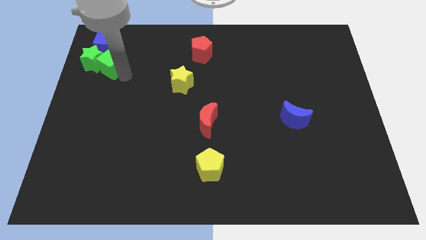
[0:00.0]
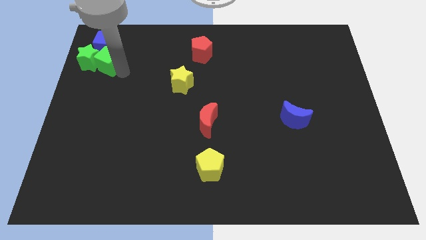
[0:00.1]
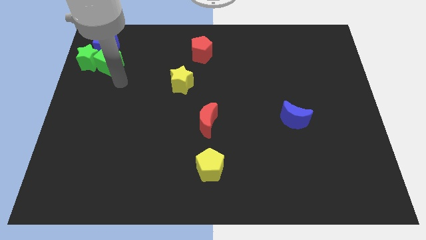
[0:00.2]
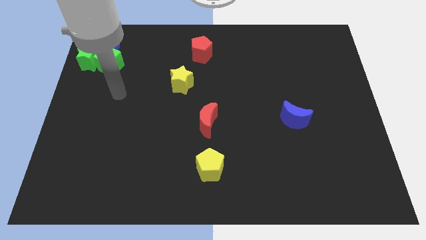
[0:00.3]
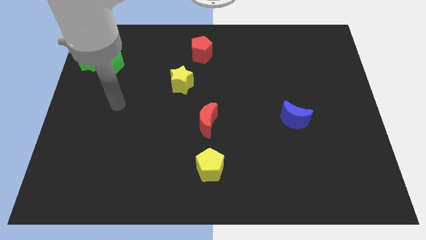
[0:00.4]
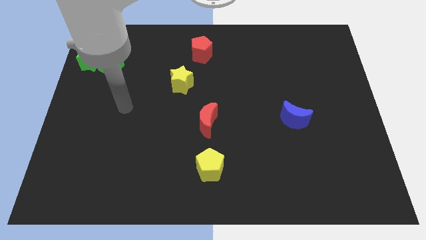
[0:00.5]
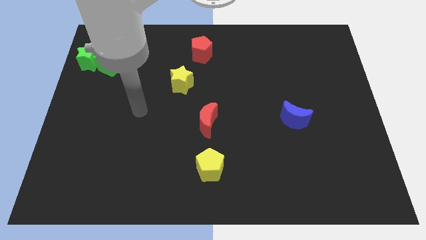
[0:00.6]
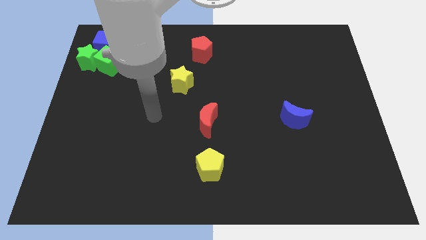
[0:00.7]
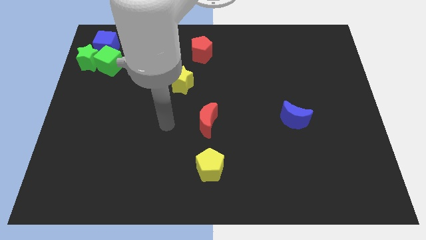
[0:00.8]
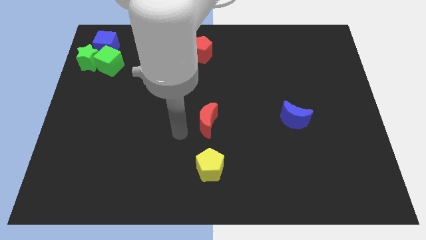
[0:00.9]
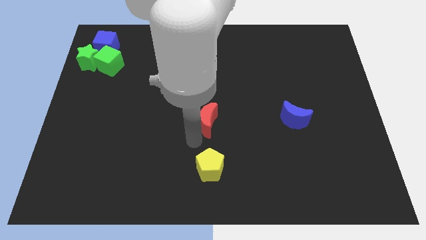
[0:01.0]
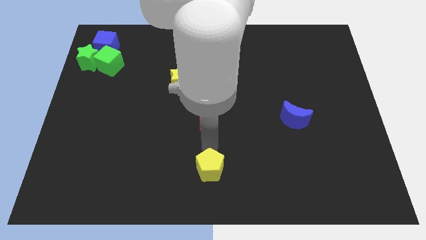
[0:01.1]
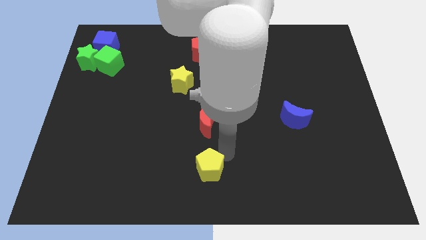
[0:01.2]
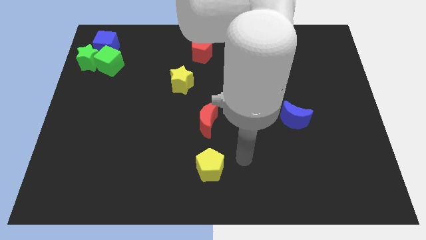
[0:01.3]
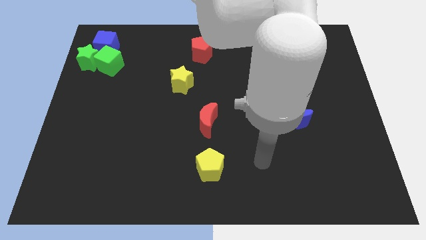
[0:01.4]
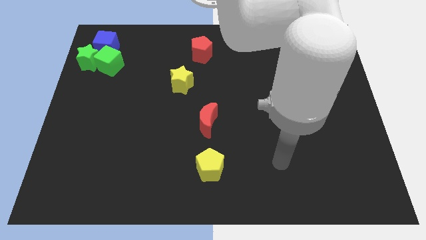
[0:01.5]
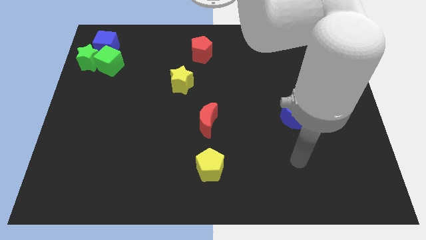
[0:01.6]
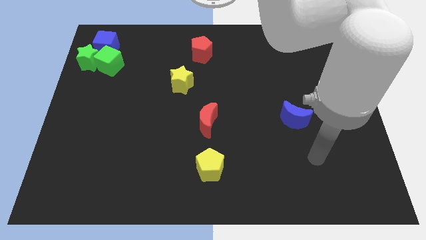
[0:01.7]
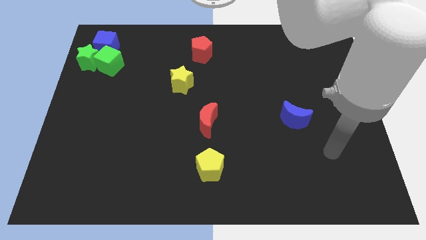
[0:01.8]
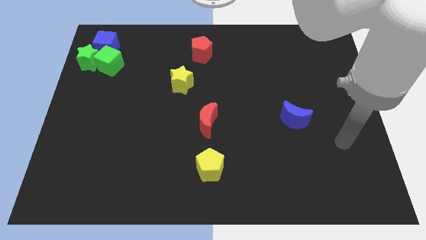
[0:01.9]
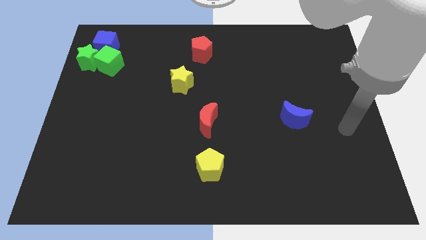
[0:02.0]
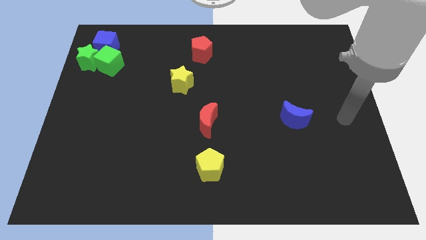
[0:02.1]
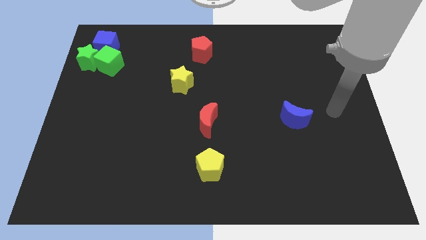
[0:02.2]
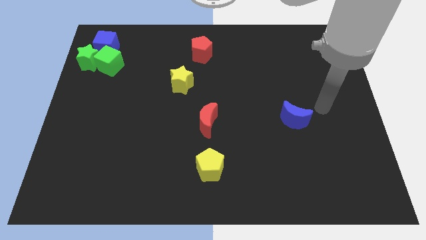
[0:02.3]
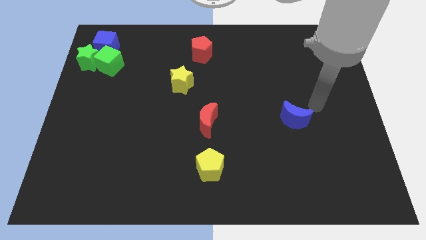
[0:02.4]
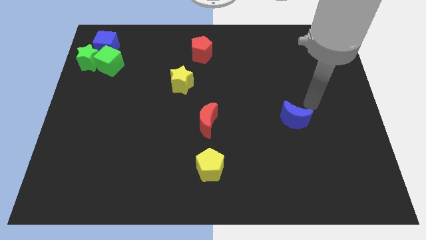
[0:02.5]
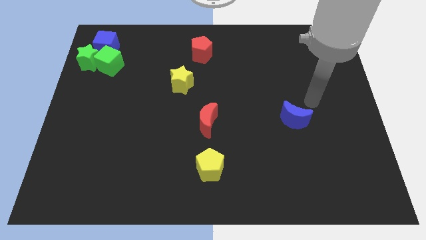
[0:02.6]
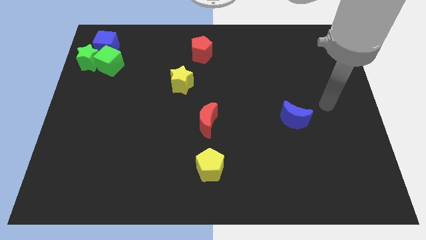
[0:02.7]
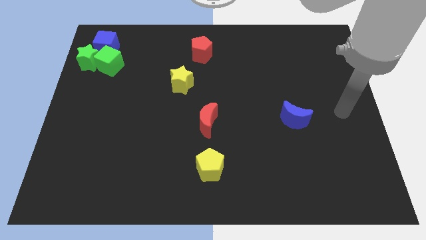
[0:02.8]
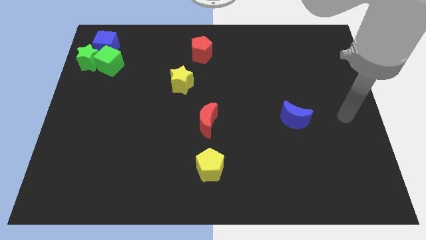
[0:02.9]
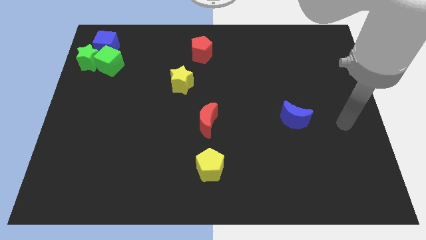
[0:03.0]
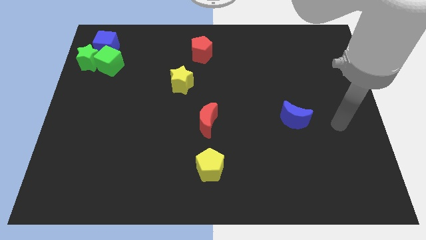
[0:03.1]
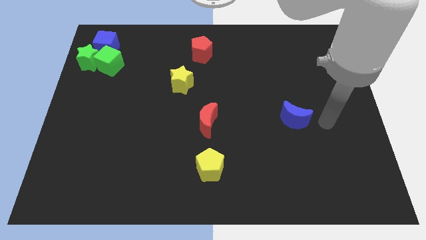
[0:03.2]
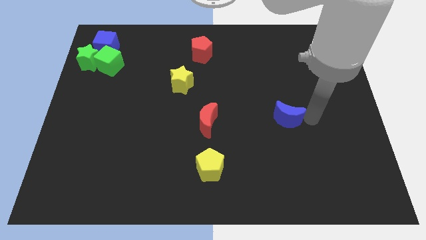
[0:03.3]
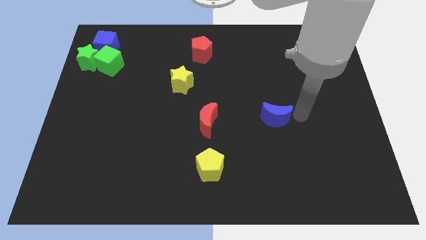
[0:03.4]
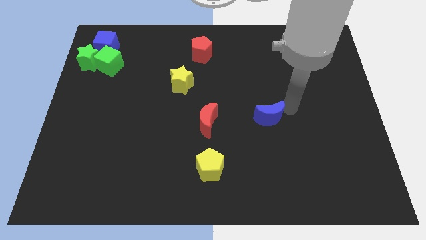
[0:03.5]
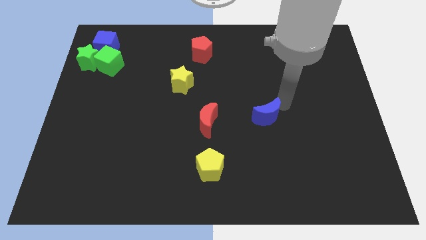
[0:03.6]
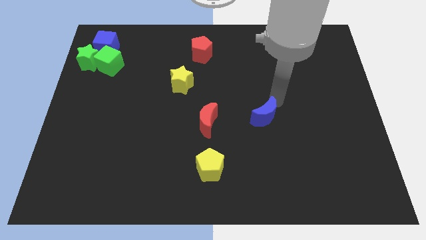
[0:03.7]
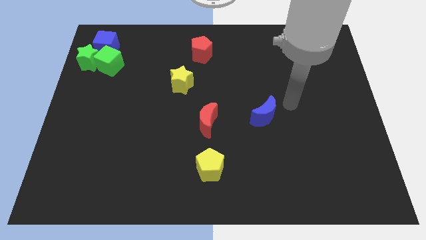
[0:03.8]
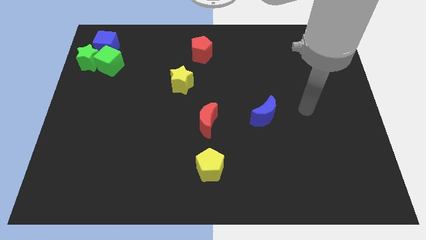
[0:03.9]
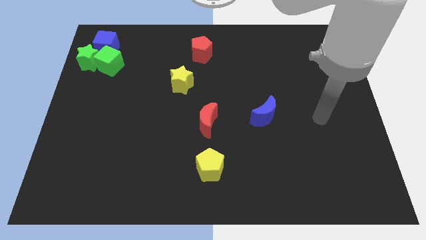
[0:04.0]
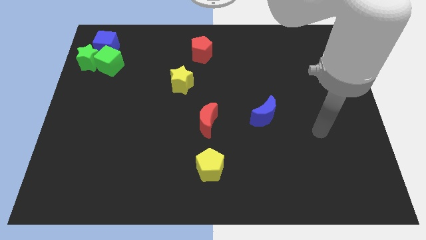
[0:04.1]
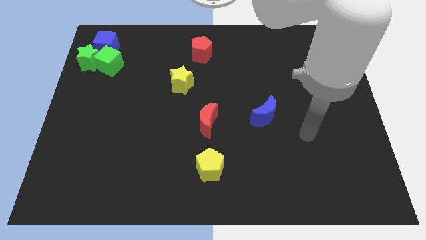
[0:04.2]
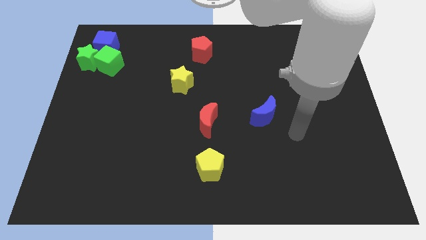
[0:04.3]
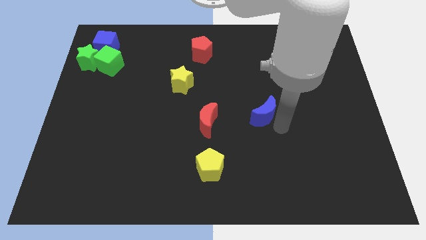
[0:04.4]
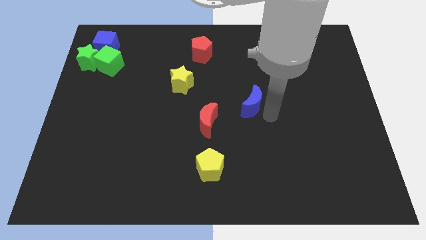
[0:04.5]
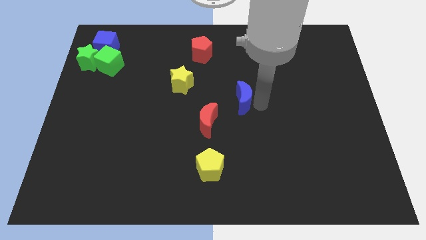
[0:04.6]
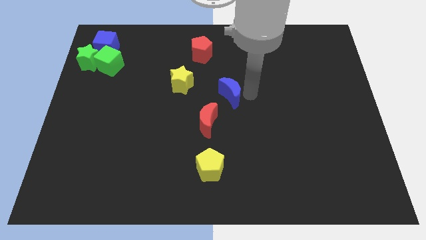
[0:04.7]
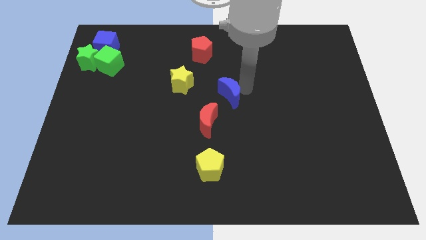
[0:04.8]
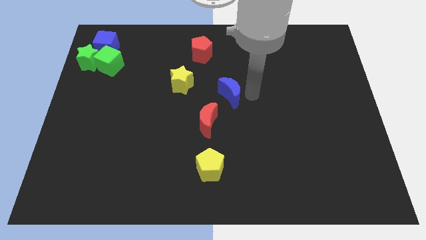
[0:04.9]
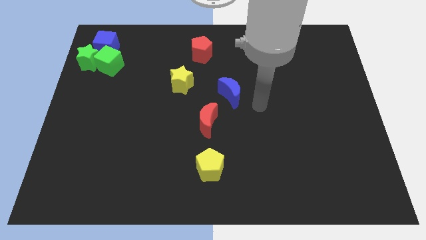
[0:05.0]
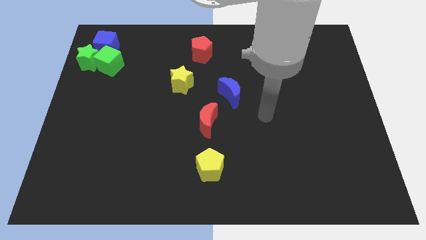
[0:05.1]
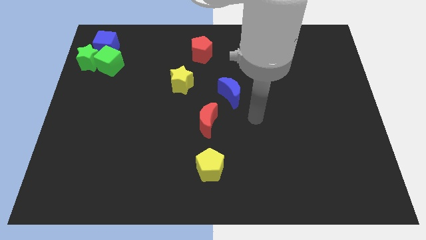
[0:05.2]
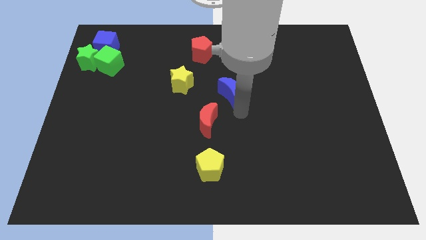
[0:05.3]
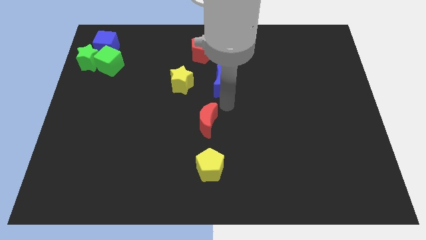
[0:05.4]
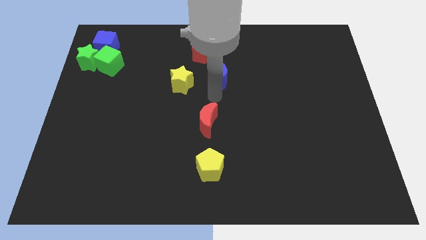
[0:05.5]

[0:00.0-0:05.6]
place the blue crescent to the right of the yellow star

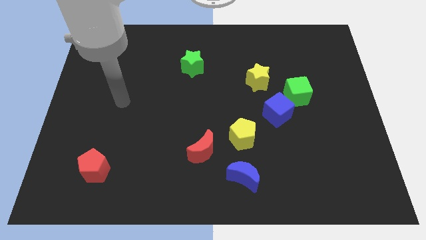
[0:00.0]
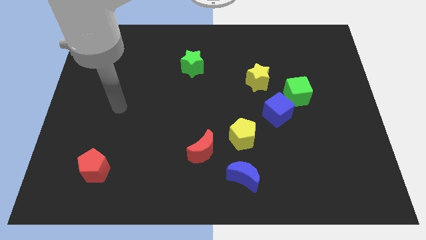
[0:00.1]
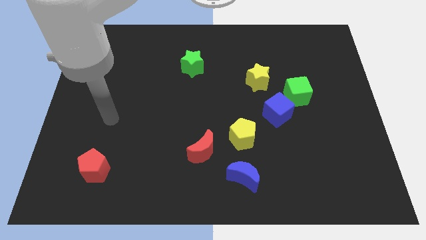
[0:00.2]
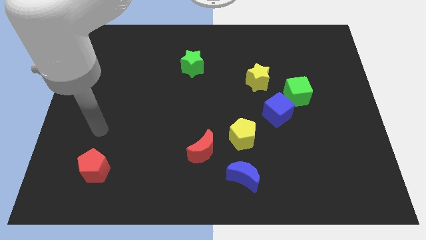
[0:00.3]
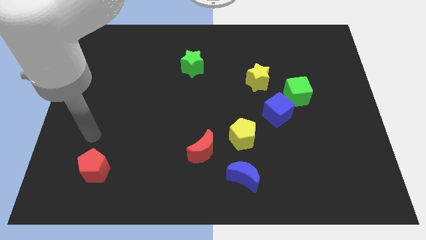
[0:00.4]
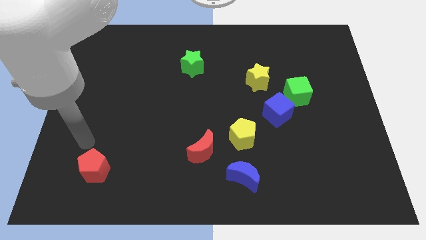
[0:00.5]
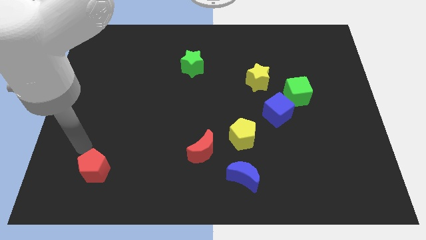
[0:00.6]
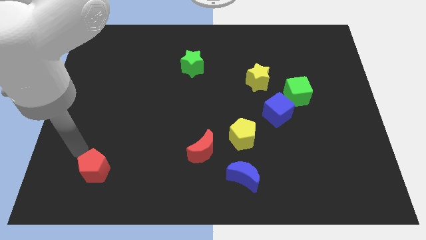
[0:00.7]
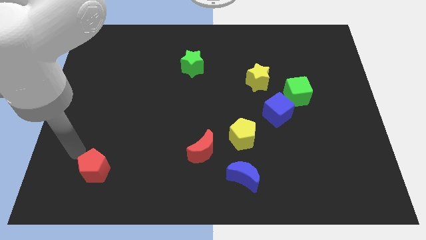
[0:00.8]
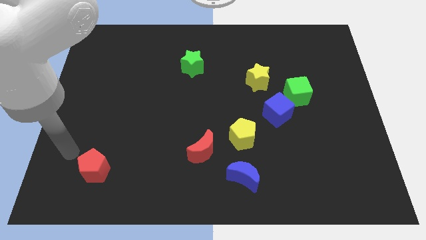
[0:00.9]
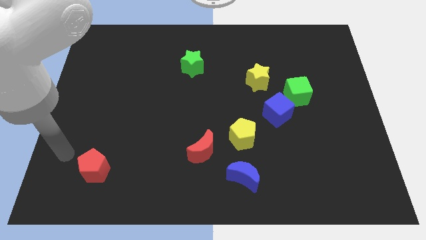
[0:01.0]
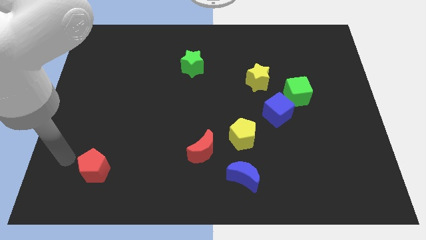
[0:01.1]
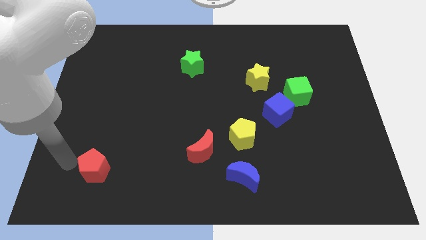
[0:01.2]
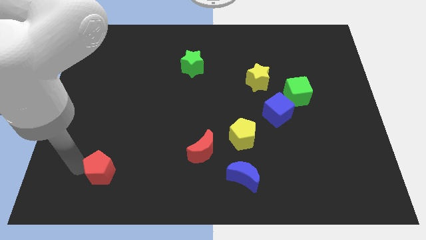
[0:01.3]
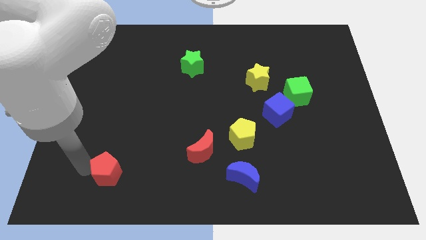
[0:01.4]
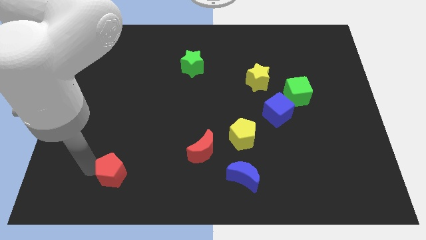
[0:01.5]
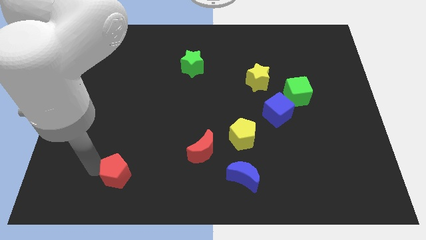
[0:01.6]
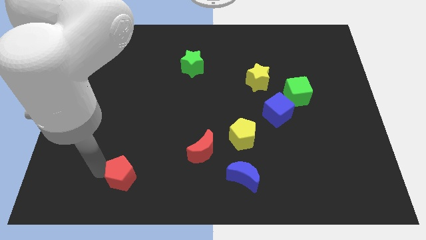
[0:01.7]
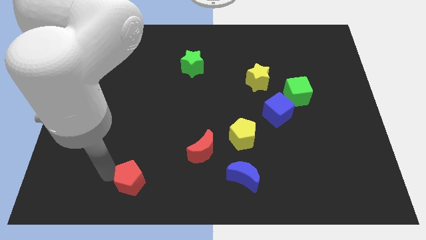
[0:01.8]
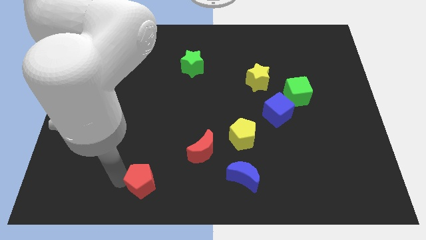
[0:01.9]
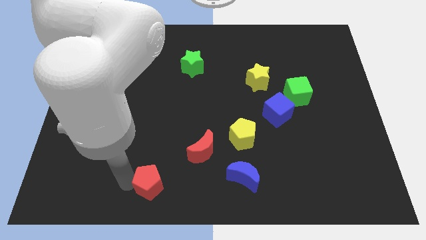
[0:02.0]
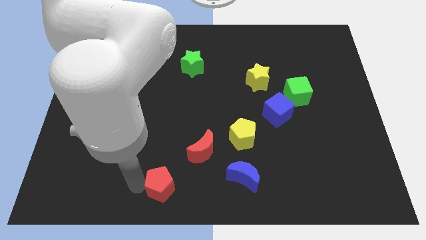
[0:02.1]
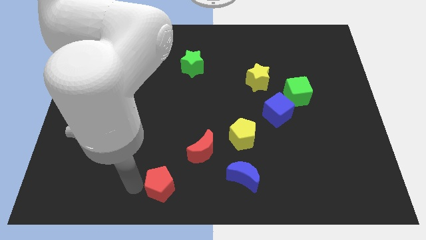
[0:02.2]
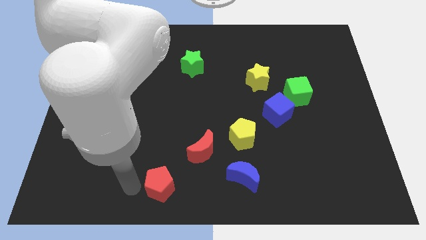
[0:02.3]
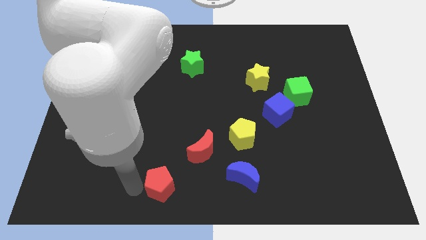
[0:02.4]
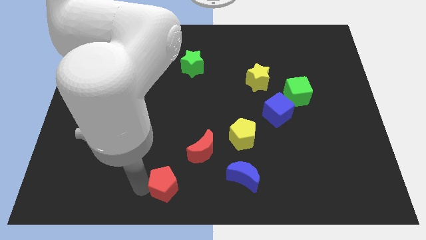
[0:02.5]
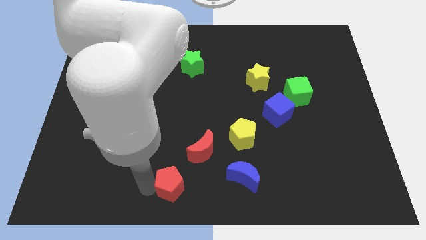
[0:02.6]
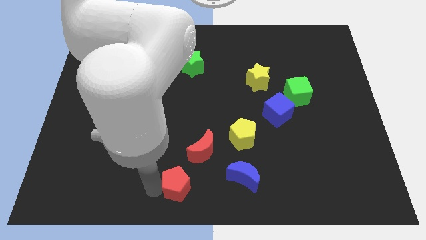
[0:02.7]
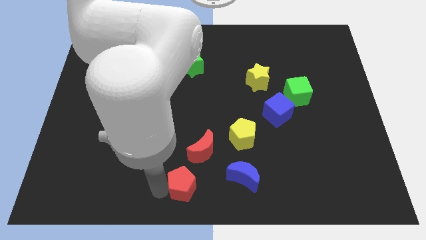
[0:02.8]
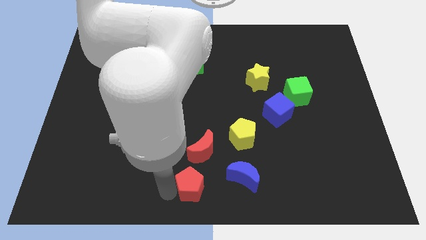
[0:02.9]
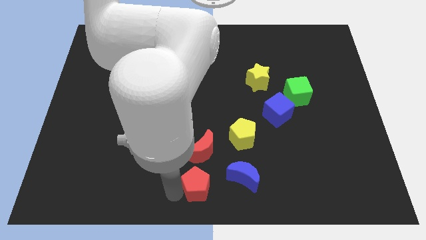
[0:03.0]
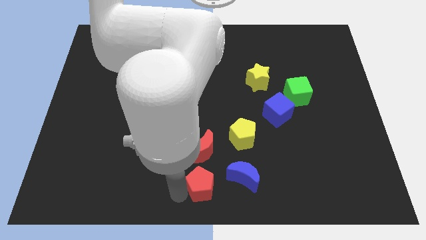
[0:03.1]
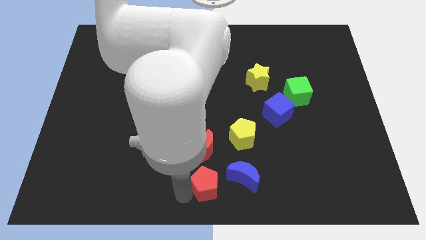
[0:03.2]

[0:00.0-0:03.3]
put the red pentagon below the red crescent
